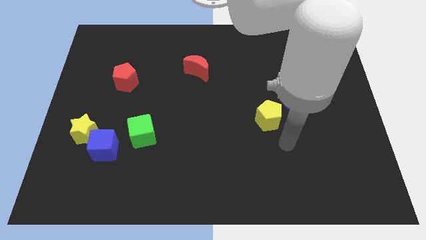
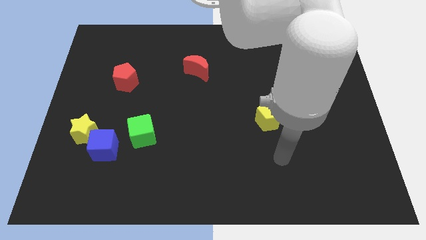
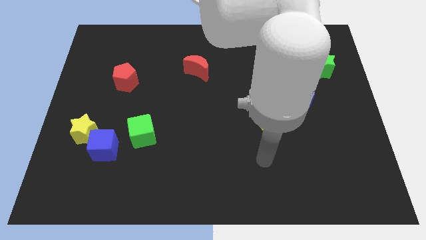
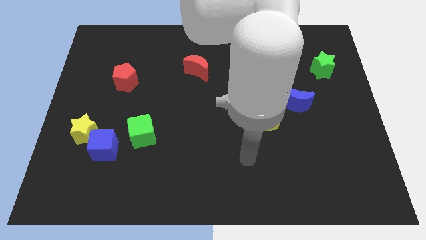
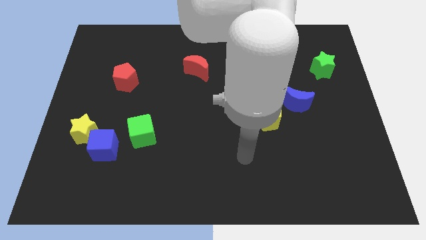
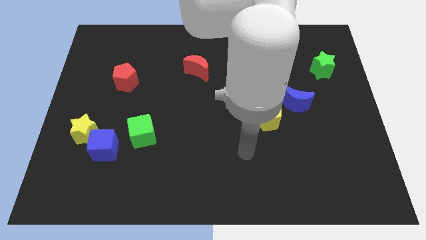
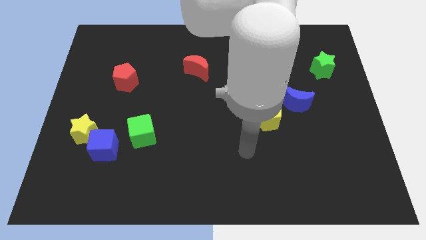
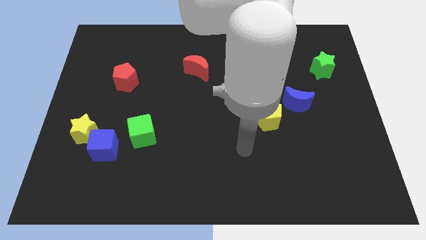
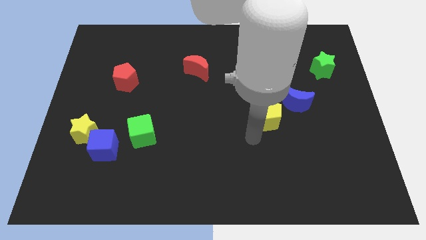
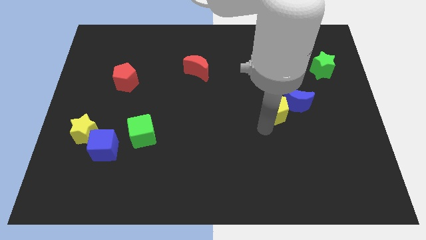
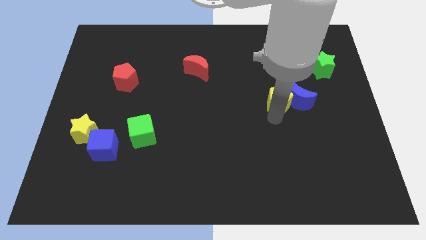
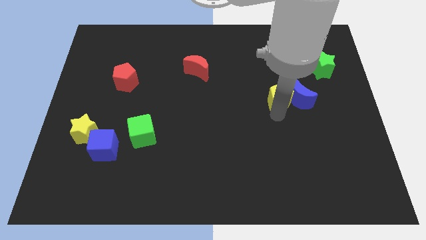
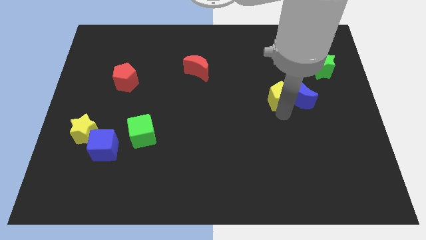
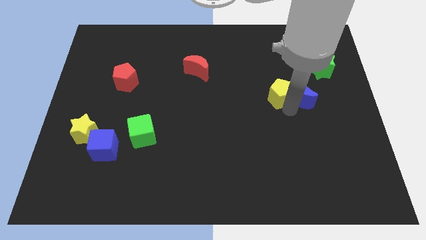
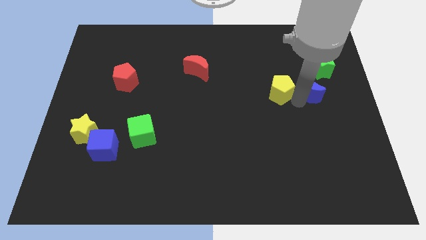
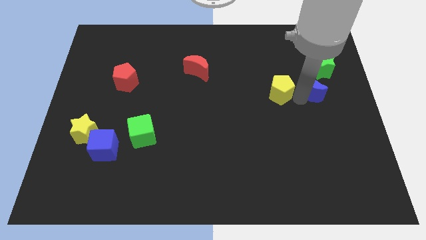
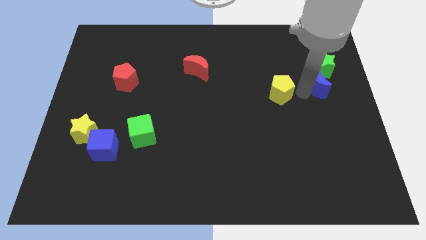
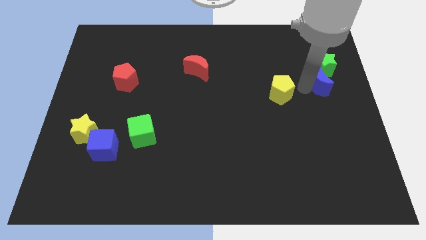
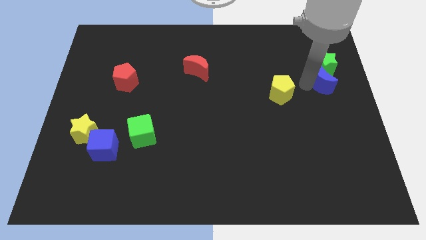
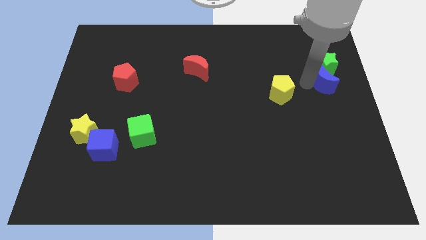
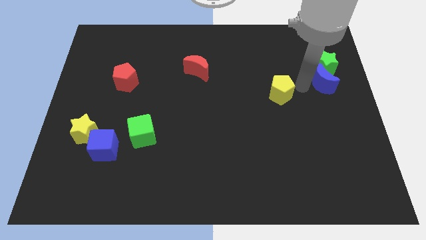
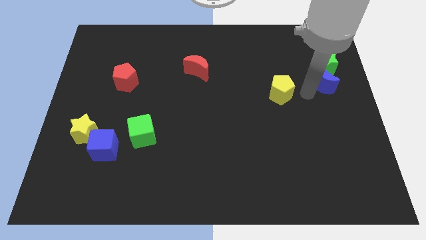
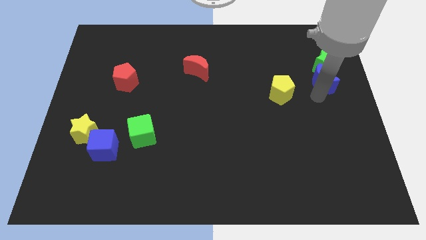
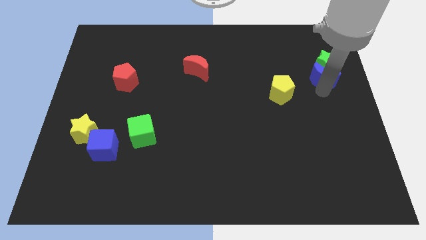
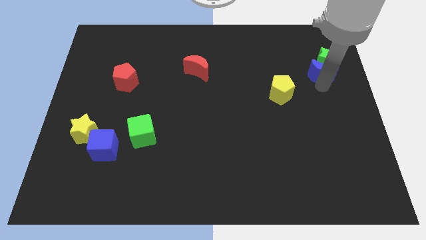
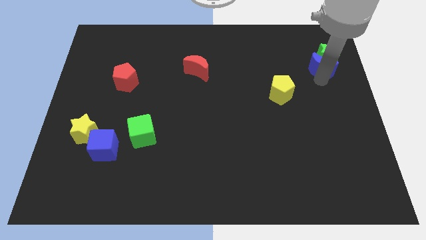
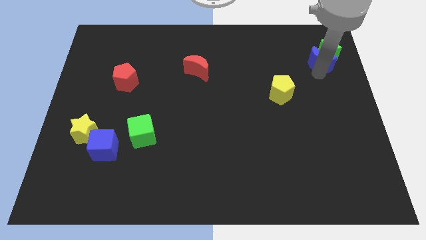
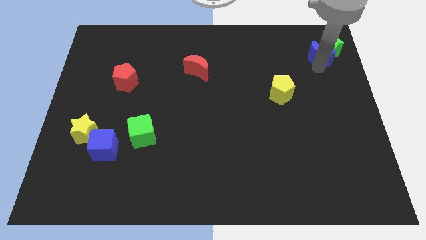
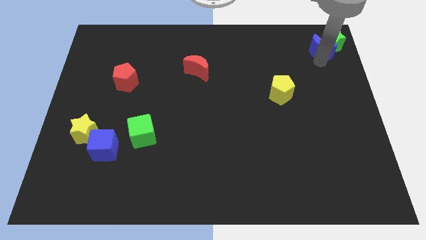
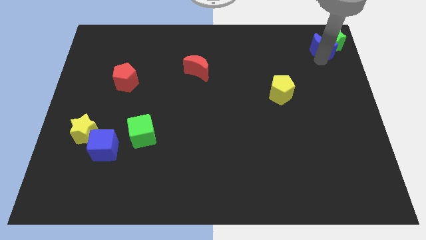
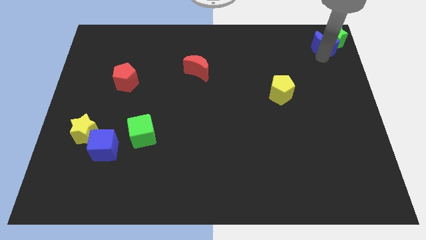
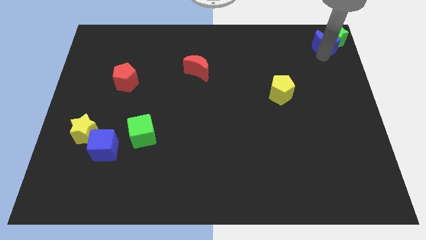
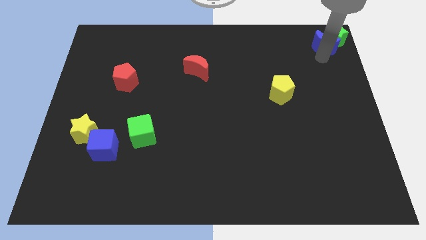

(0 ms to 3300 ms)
move the blue crescent along with the green star to the top right corner of the board

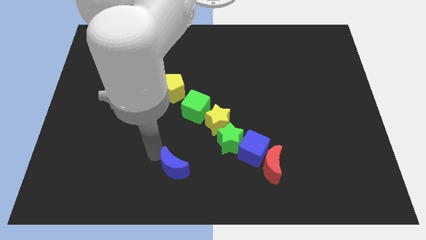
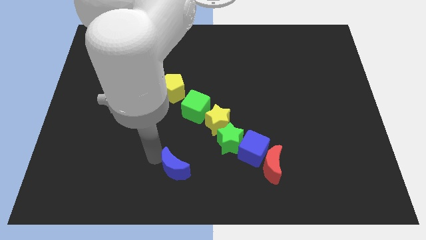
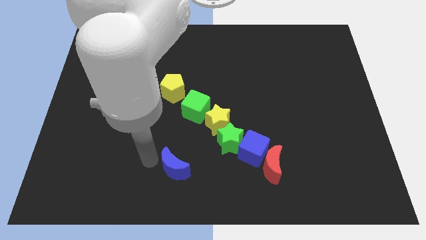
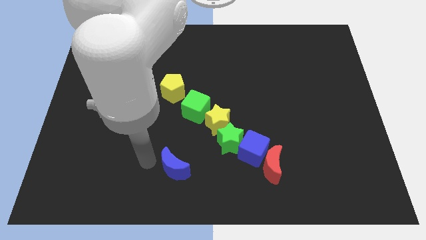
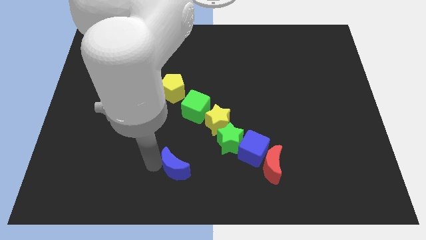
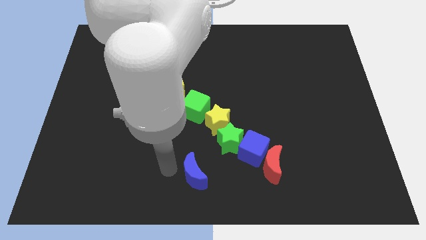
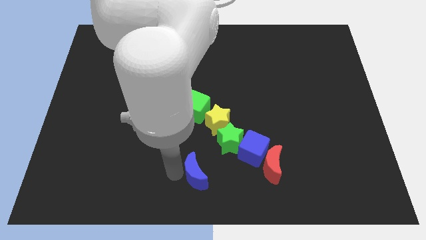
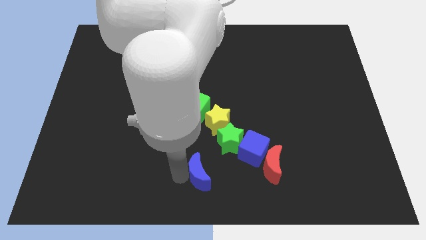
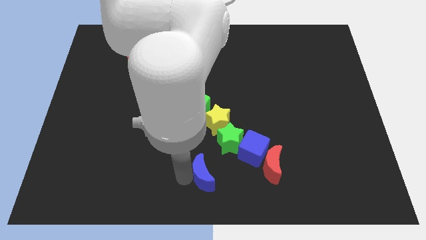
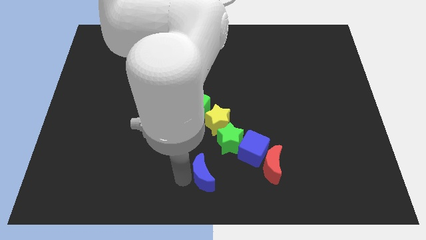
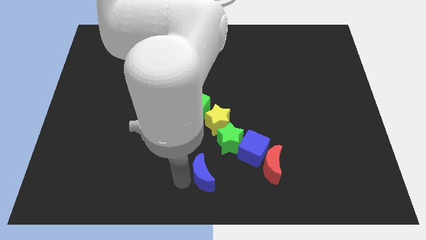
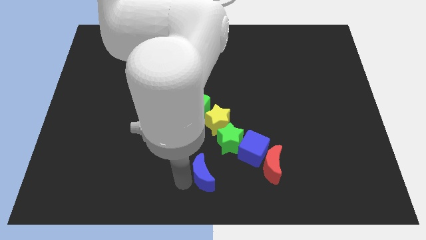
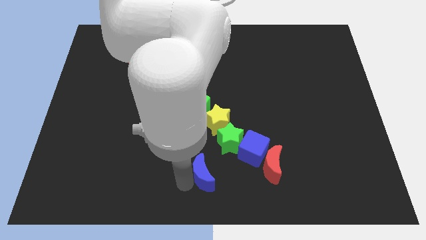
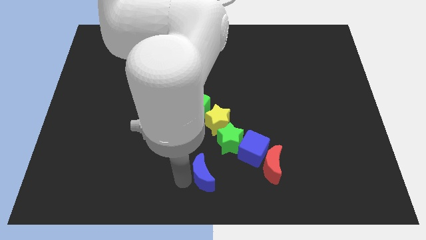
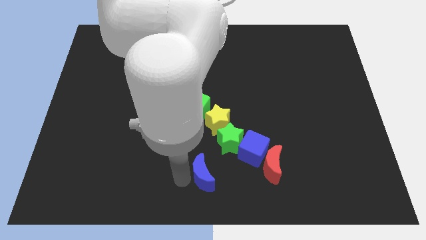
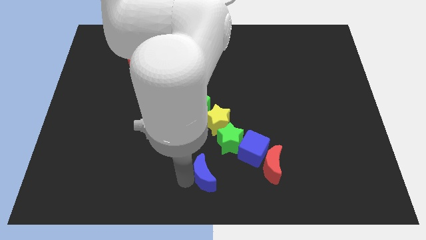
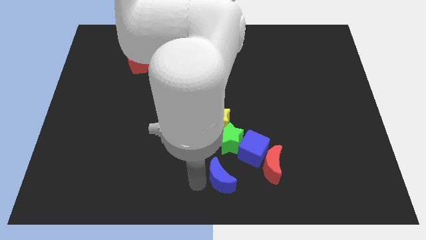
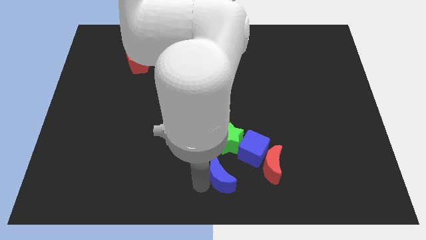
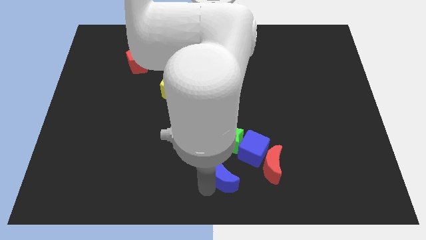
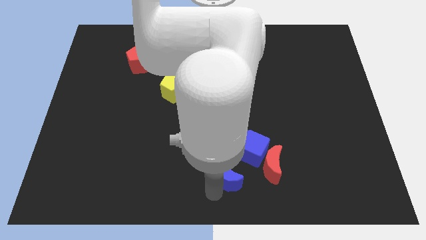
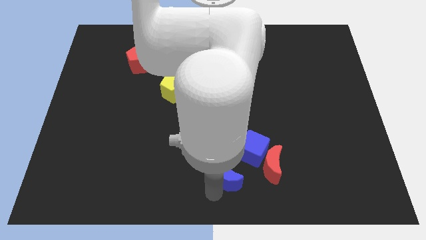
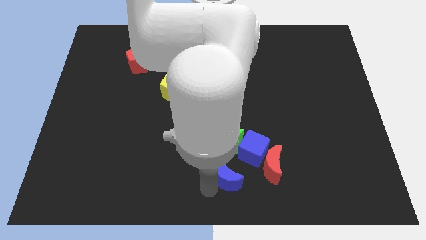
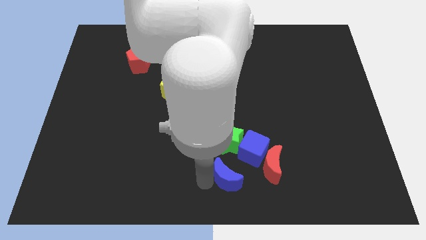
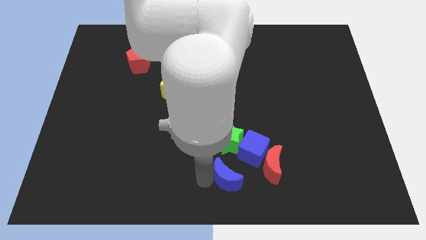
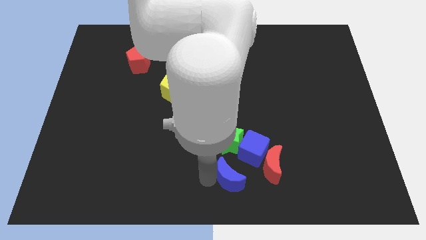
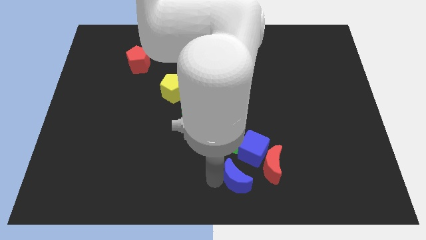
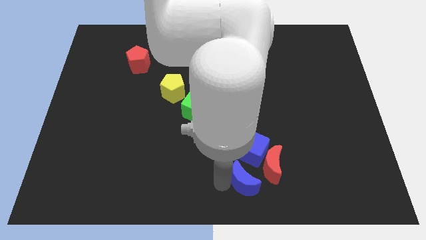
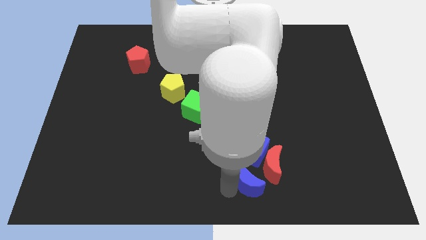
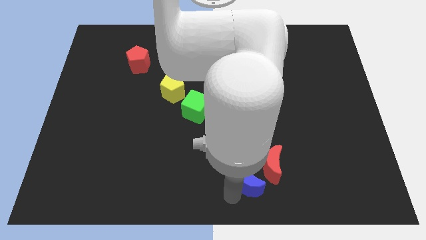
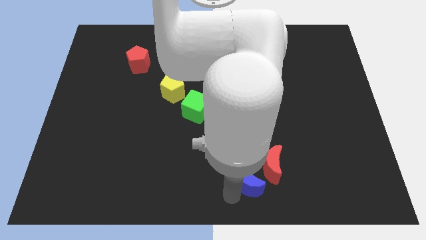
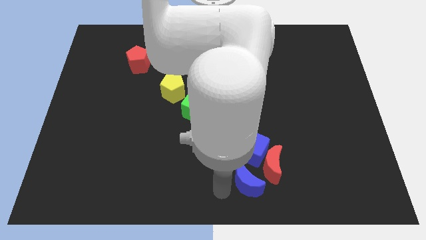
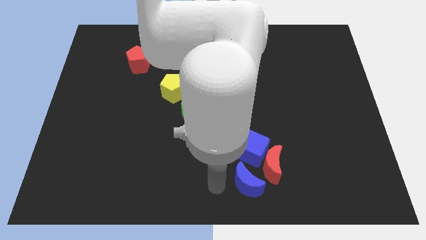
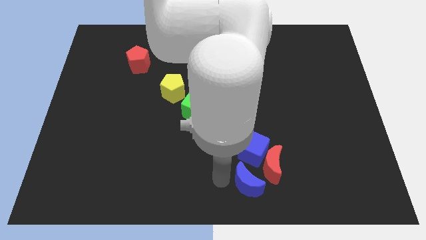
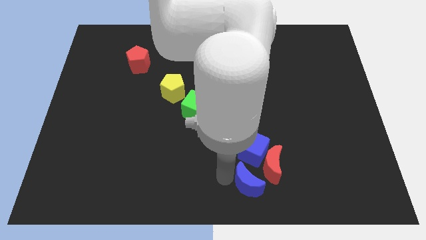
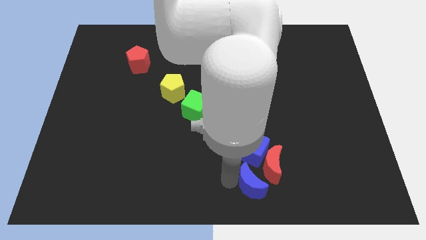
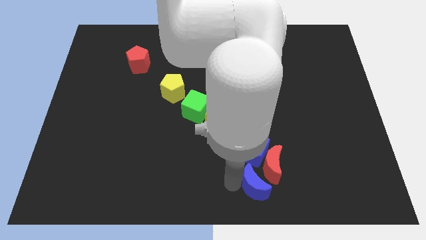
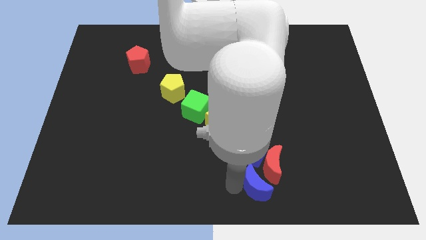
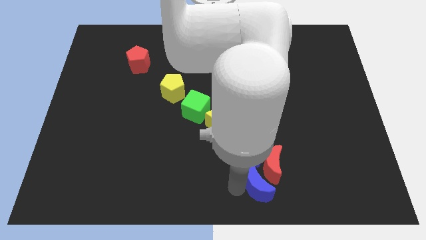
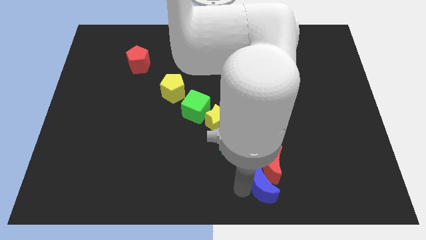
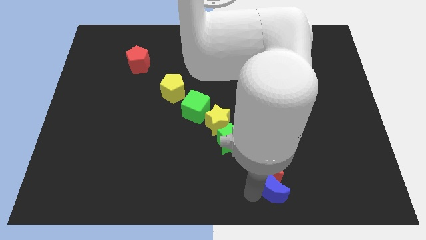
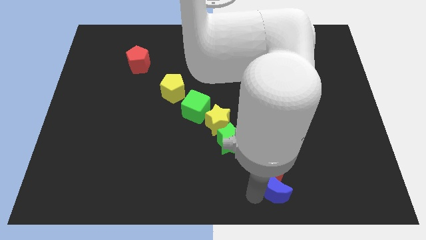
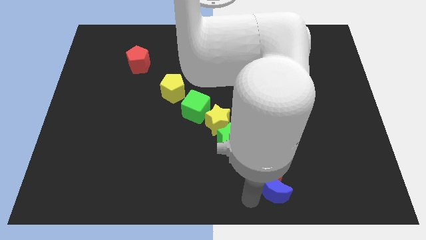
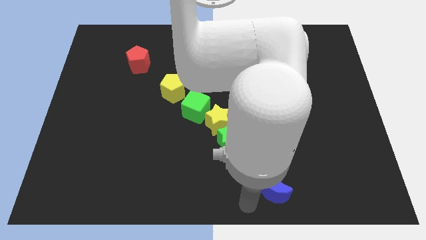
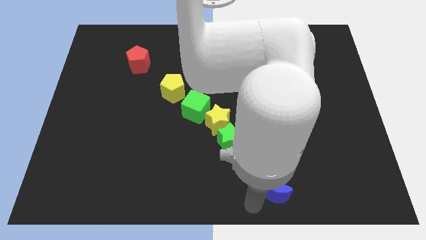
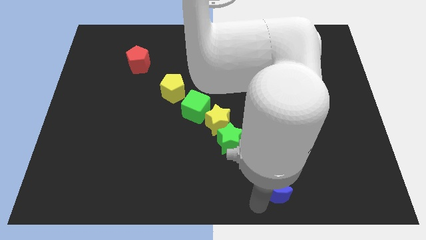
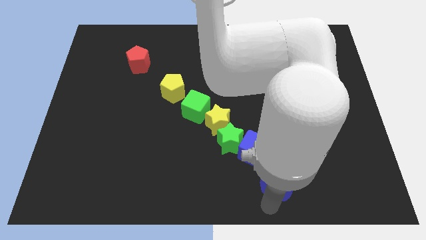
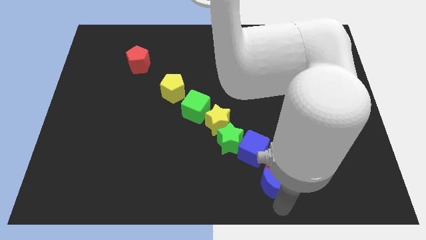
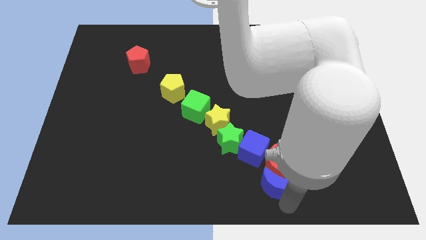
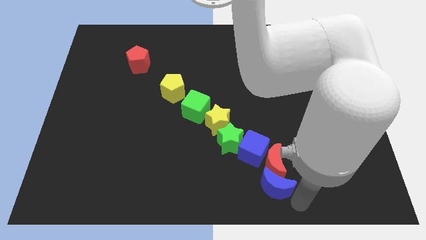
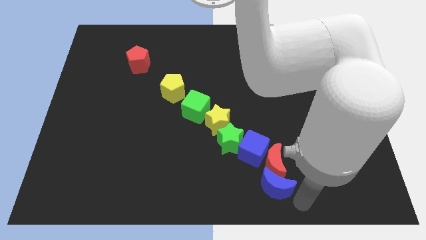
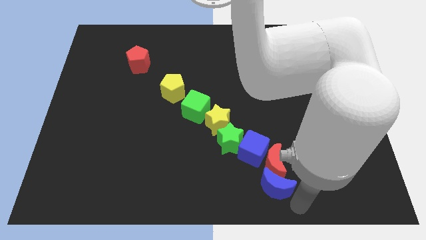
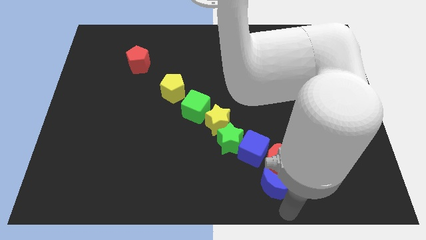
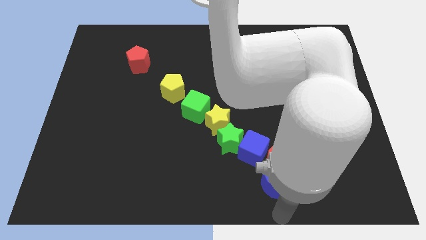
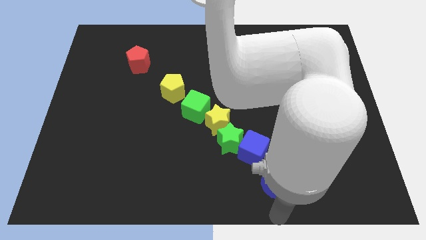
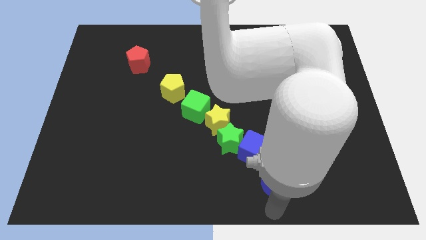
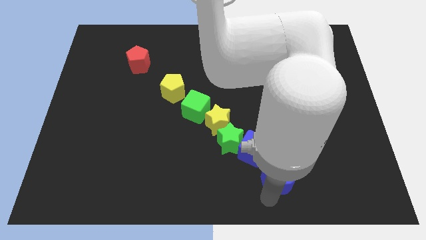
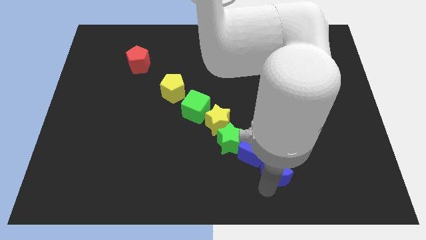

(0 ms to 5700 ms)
push the blue crescent into the red crescent
